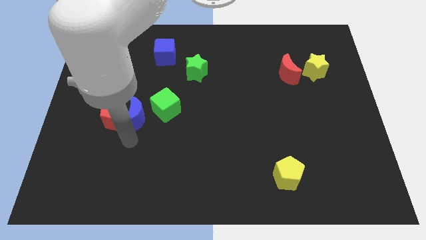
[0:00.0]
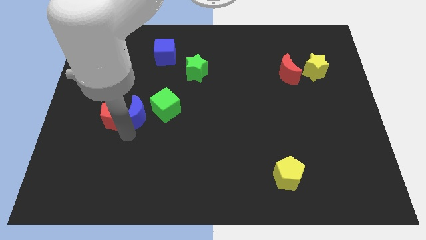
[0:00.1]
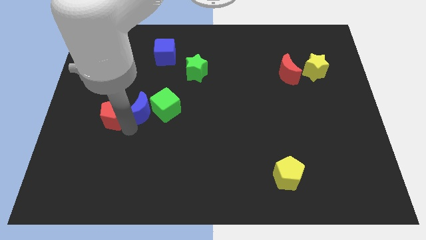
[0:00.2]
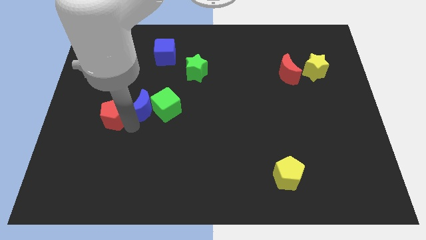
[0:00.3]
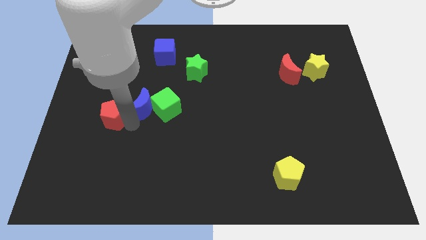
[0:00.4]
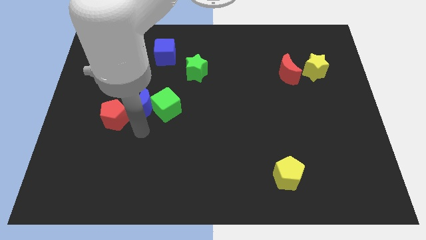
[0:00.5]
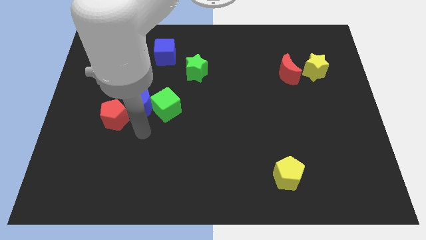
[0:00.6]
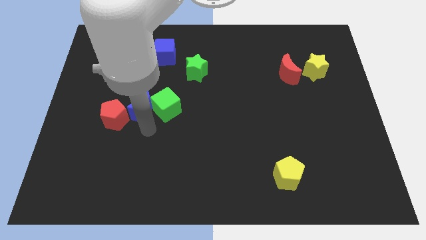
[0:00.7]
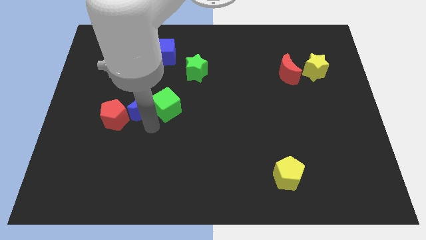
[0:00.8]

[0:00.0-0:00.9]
move the blue crescent in between the green cube and red pentagon

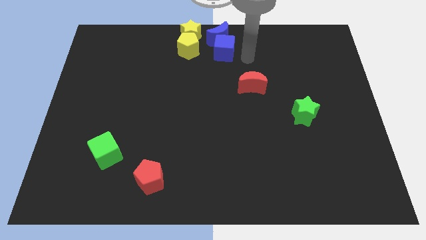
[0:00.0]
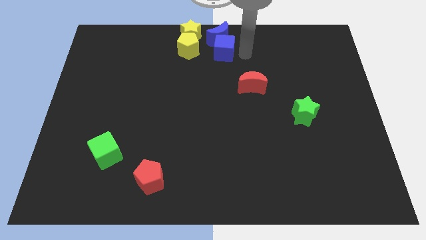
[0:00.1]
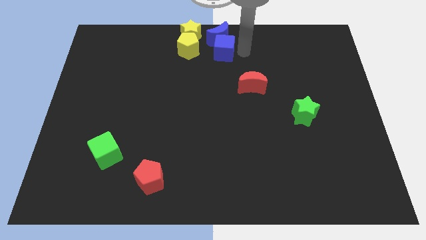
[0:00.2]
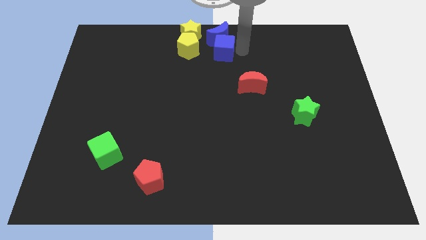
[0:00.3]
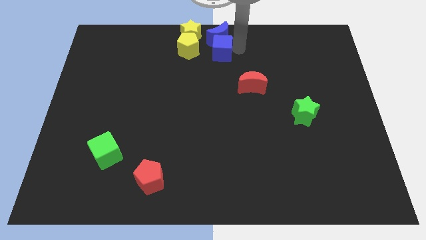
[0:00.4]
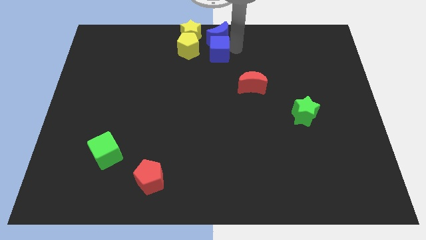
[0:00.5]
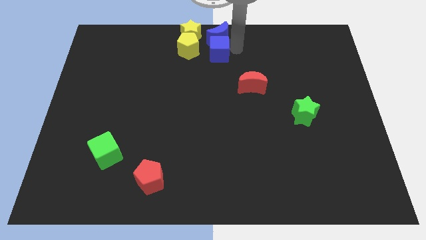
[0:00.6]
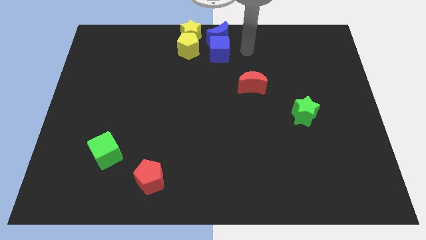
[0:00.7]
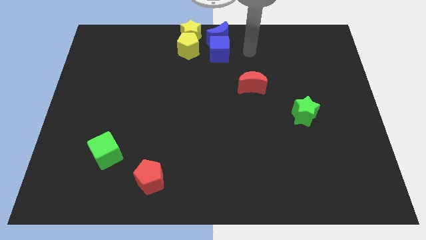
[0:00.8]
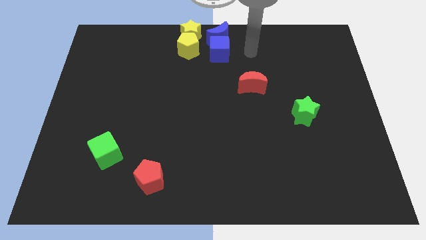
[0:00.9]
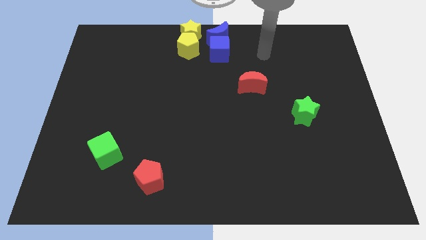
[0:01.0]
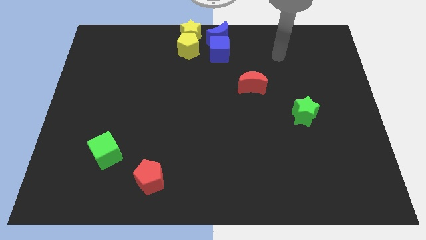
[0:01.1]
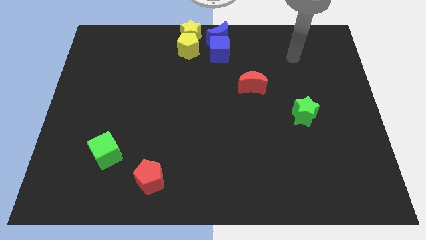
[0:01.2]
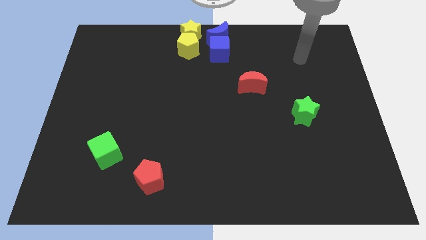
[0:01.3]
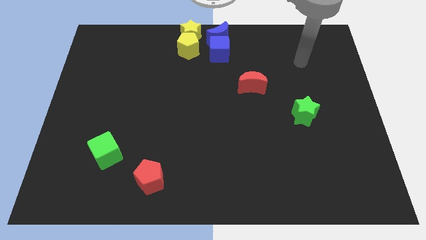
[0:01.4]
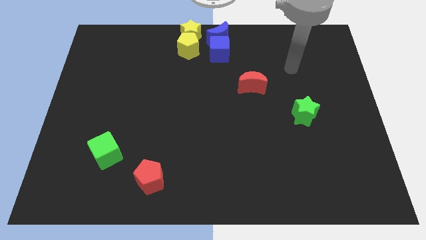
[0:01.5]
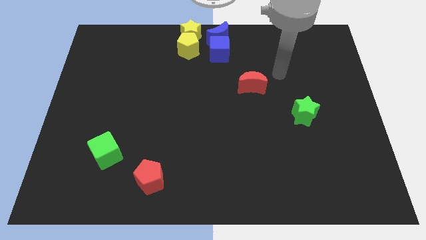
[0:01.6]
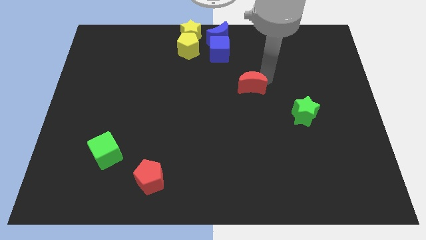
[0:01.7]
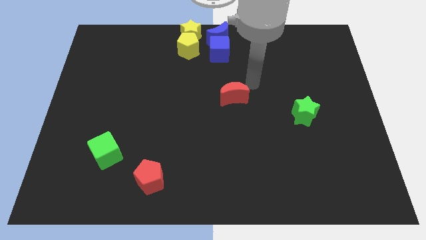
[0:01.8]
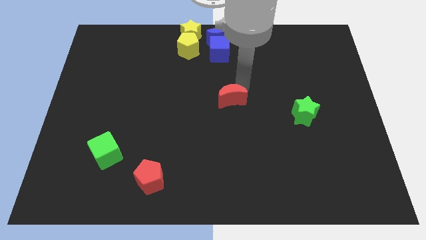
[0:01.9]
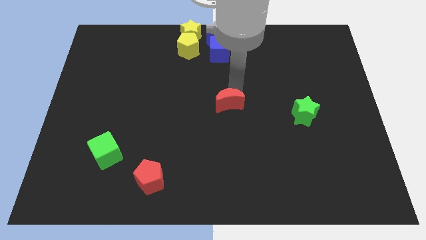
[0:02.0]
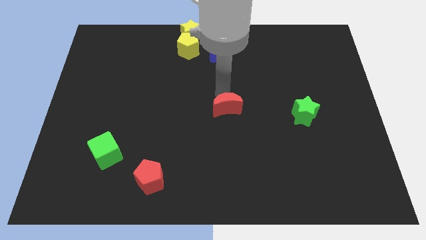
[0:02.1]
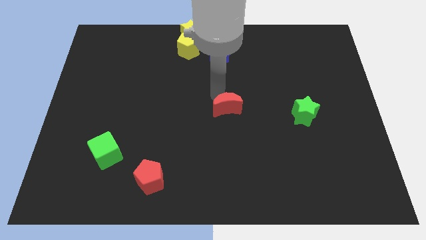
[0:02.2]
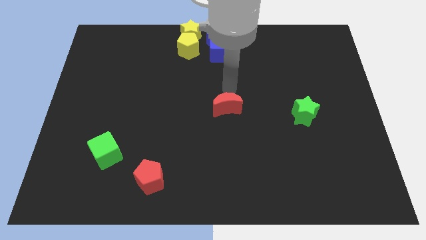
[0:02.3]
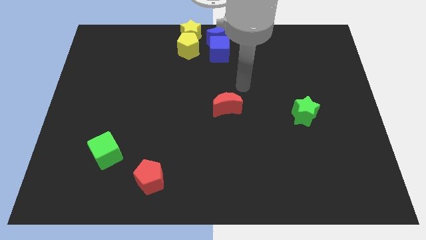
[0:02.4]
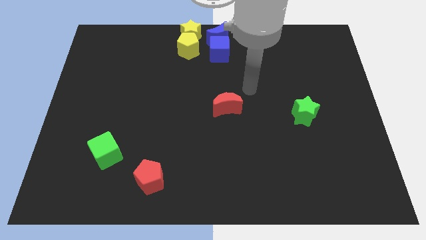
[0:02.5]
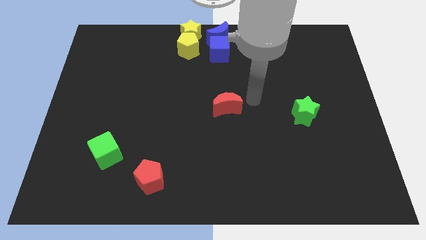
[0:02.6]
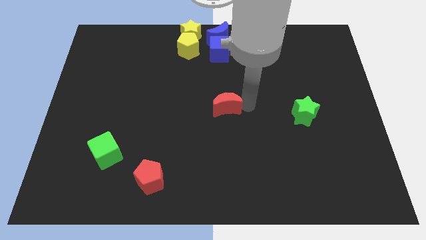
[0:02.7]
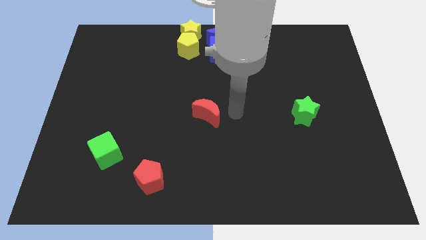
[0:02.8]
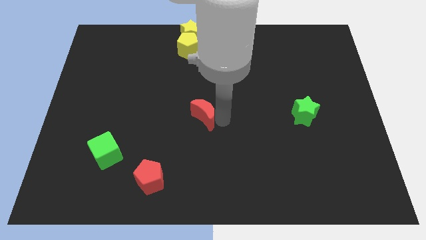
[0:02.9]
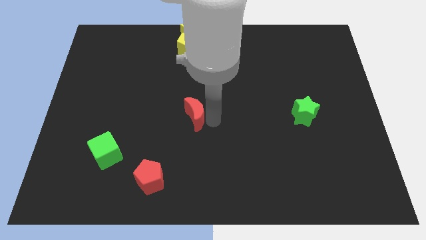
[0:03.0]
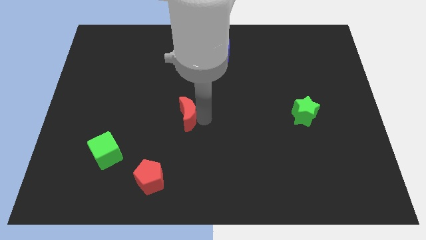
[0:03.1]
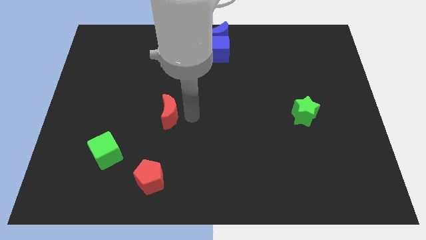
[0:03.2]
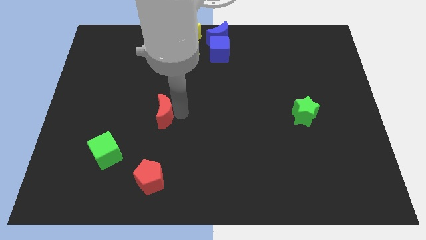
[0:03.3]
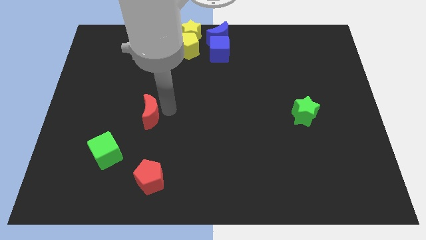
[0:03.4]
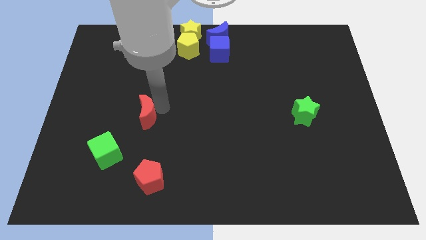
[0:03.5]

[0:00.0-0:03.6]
place red moon vertical to red penatgon

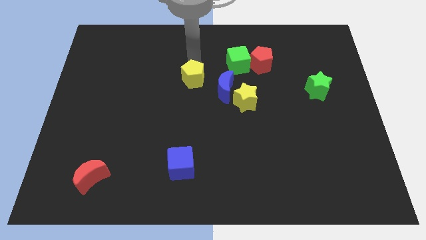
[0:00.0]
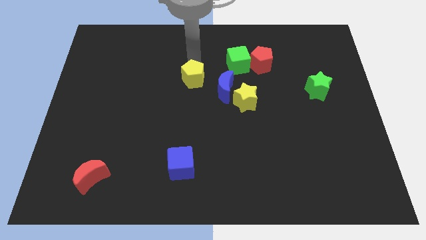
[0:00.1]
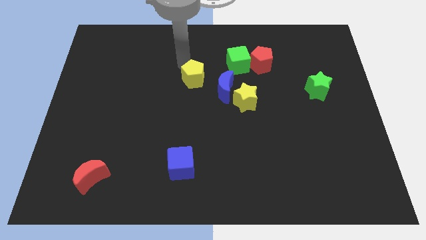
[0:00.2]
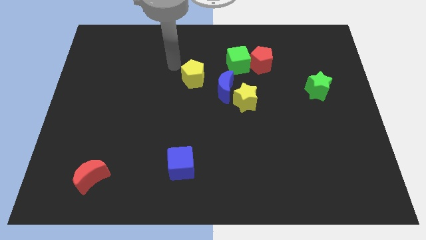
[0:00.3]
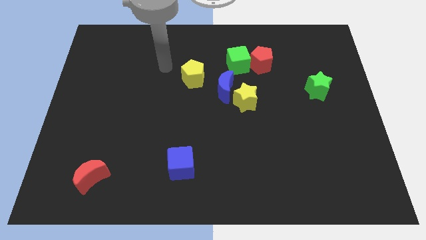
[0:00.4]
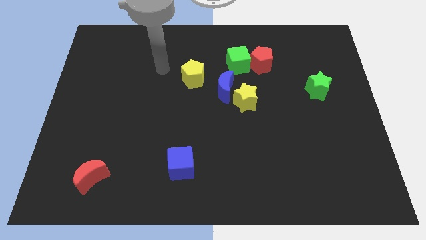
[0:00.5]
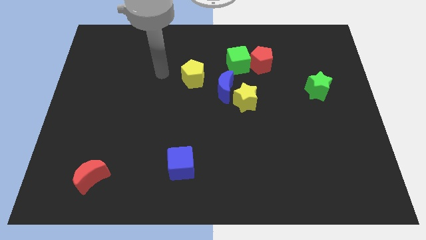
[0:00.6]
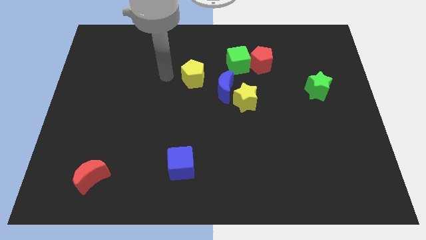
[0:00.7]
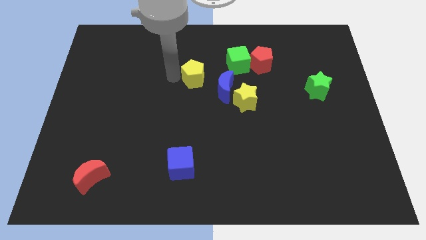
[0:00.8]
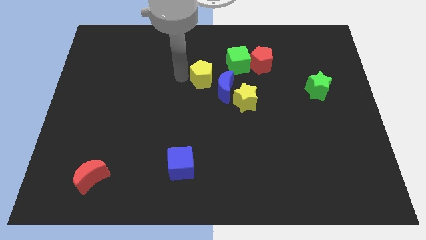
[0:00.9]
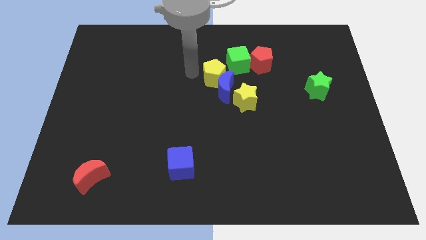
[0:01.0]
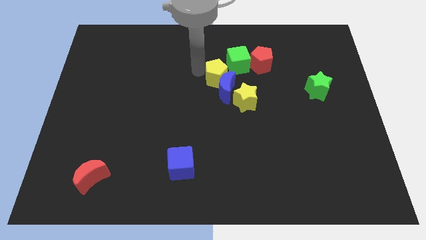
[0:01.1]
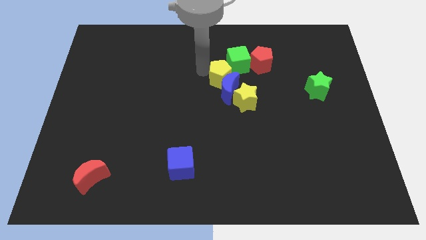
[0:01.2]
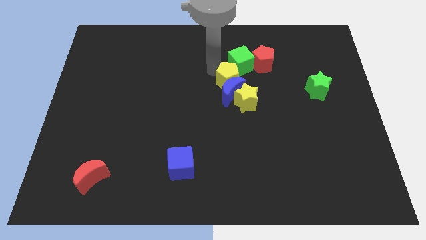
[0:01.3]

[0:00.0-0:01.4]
push the yellow pentagon into blue moon

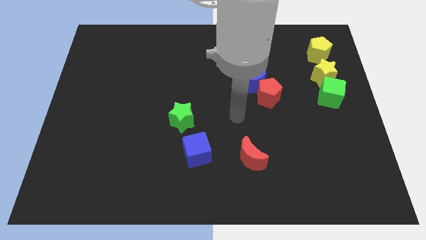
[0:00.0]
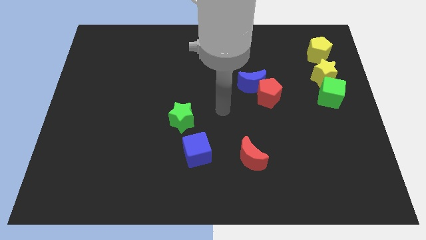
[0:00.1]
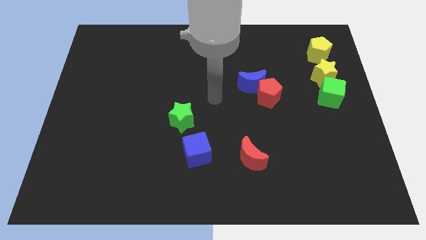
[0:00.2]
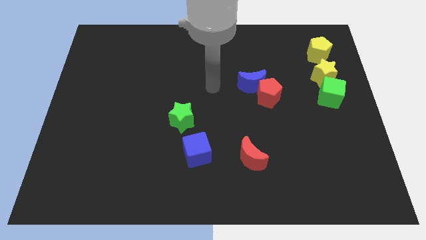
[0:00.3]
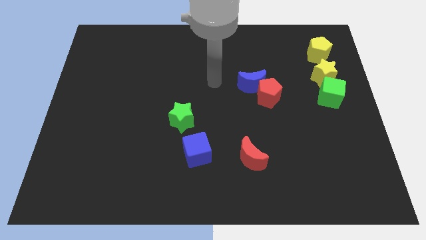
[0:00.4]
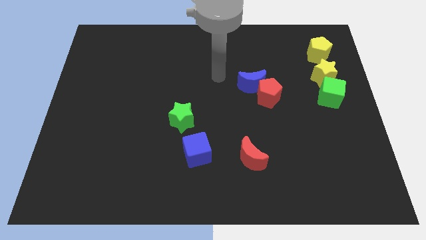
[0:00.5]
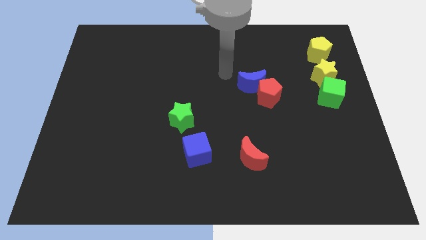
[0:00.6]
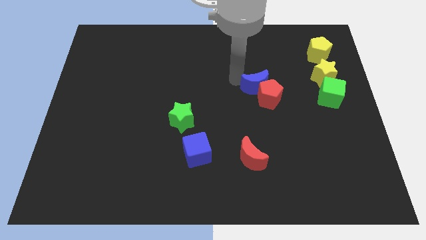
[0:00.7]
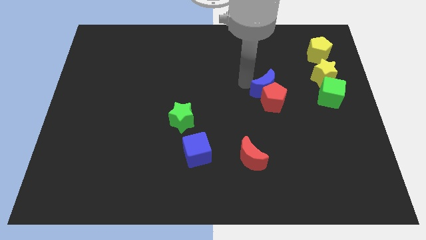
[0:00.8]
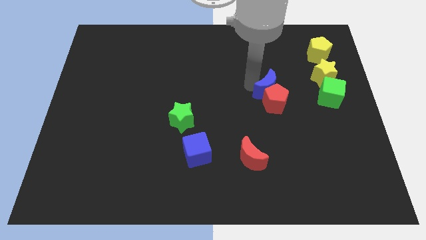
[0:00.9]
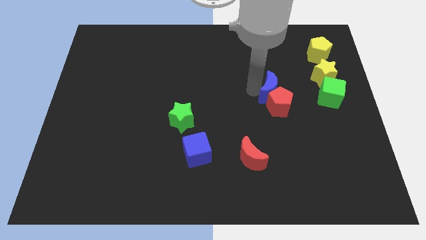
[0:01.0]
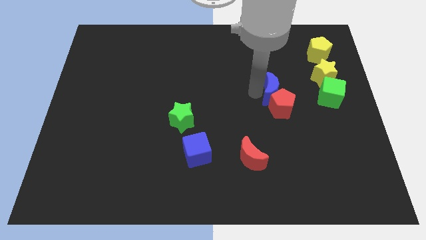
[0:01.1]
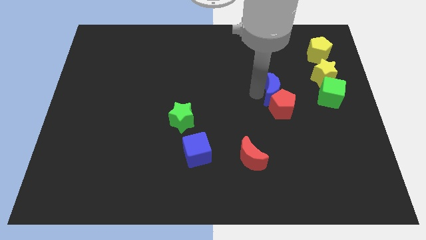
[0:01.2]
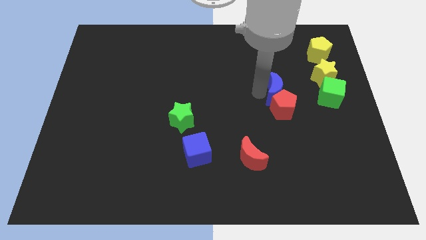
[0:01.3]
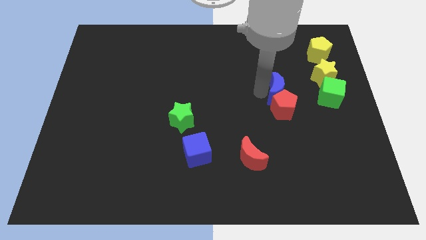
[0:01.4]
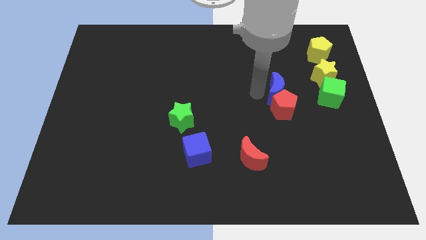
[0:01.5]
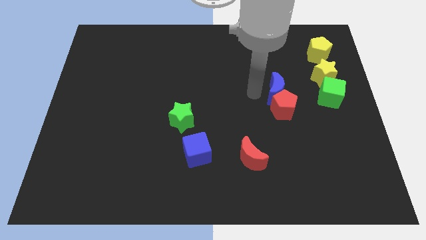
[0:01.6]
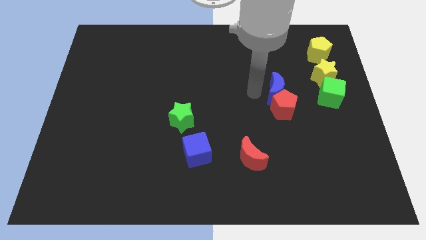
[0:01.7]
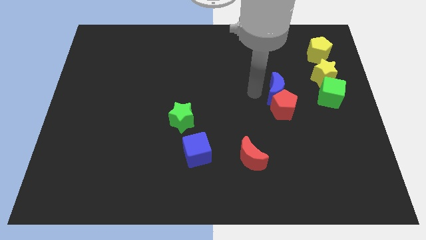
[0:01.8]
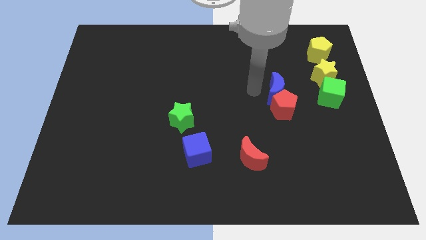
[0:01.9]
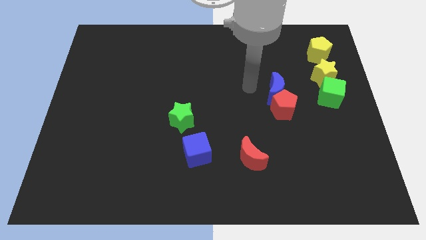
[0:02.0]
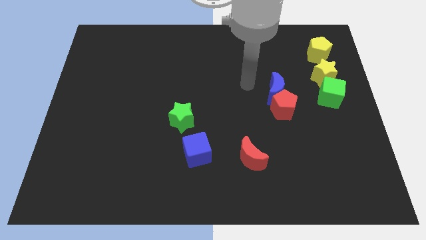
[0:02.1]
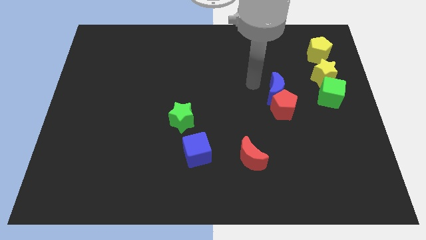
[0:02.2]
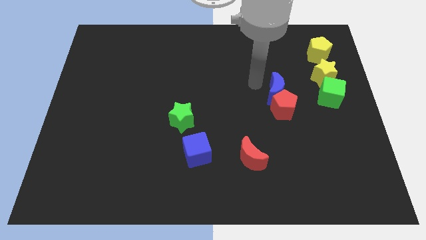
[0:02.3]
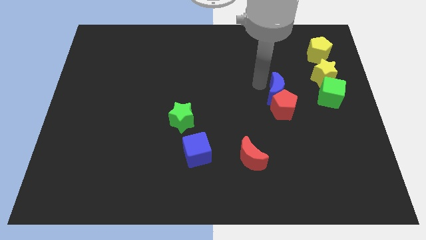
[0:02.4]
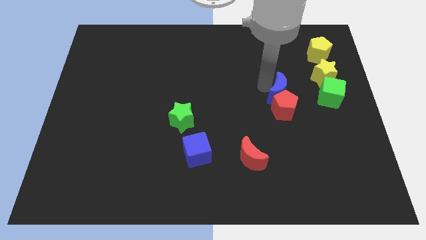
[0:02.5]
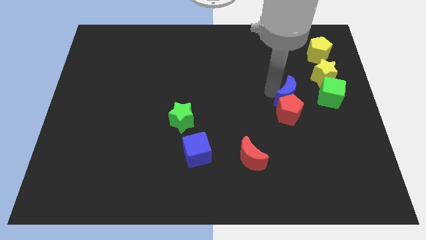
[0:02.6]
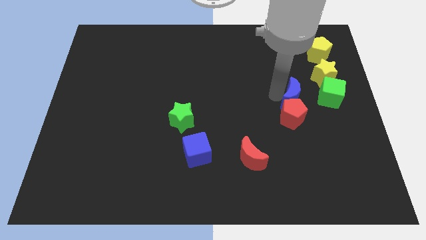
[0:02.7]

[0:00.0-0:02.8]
drag the blue crescent and red pentagon towards right

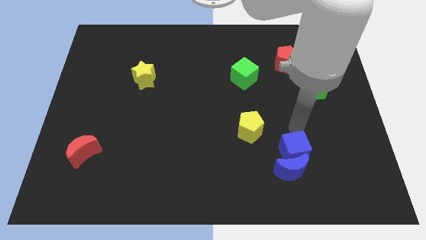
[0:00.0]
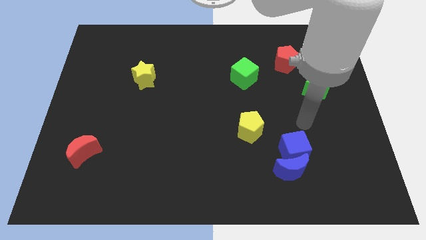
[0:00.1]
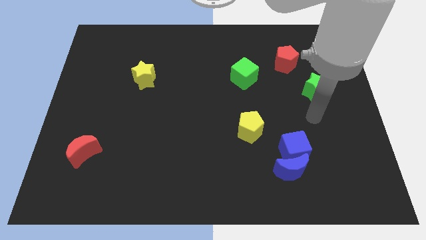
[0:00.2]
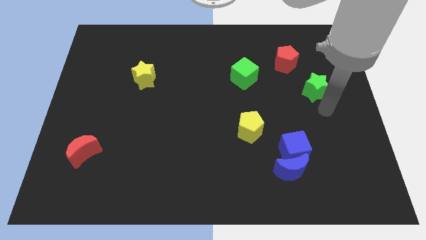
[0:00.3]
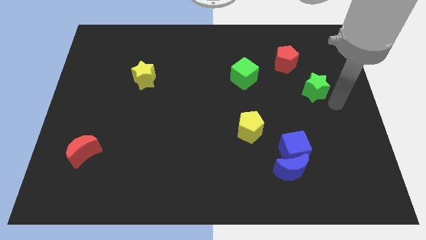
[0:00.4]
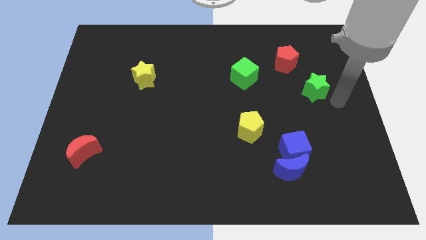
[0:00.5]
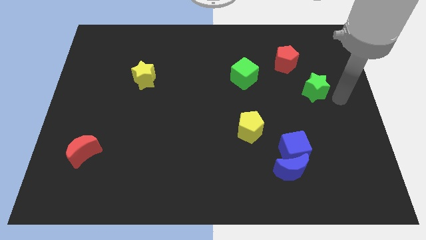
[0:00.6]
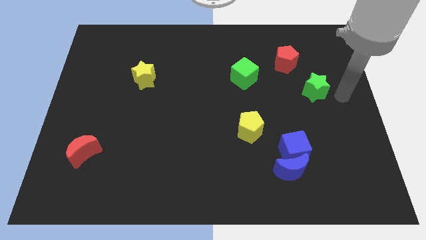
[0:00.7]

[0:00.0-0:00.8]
point your arm to the right side of green star
